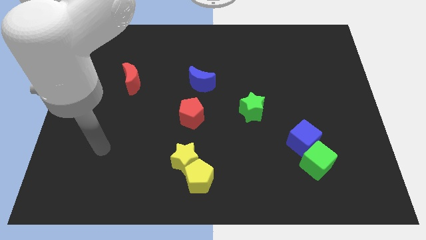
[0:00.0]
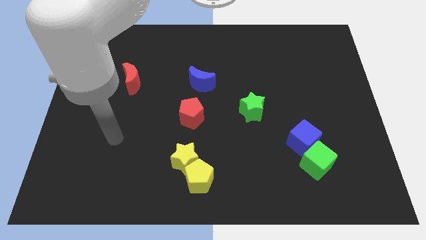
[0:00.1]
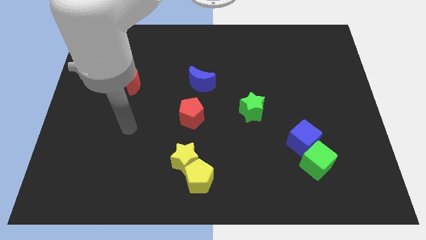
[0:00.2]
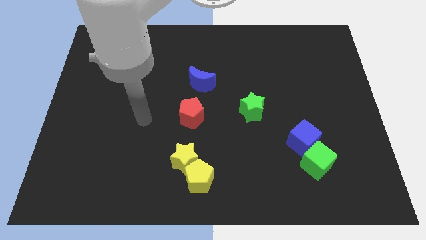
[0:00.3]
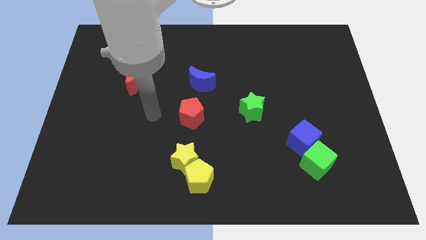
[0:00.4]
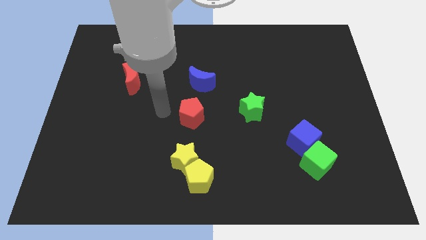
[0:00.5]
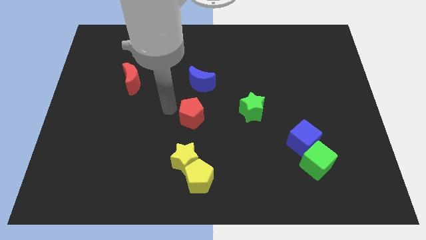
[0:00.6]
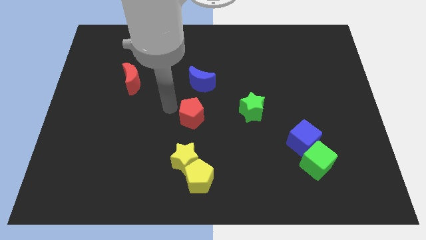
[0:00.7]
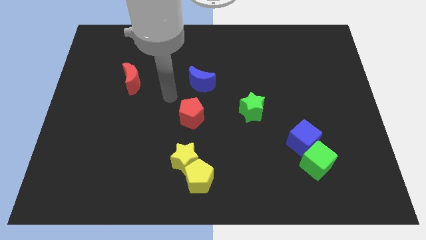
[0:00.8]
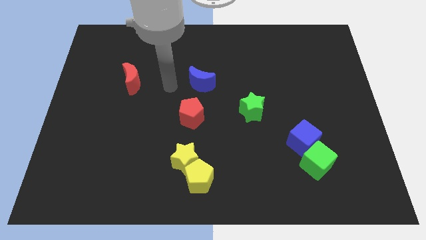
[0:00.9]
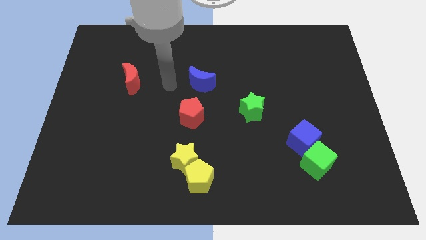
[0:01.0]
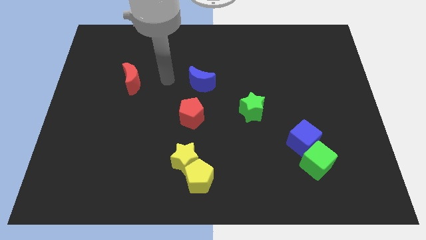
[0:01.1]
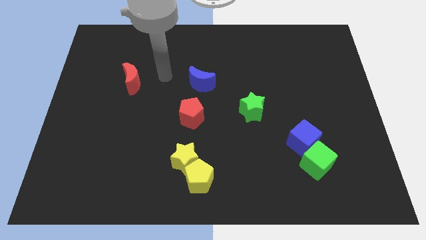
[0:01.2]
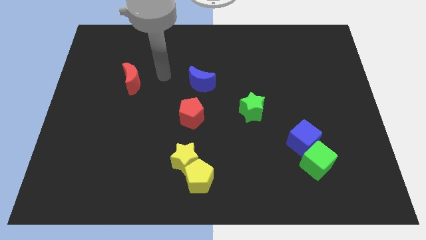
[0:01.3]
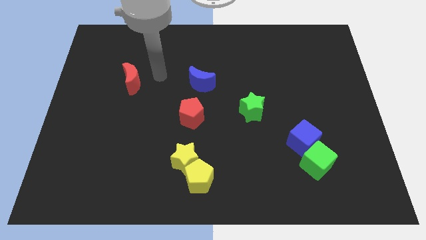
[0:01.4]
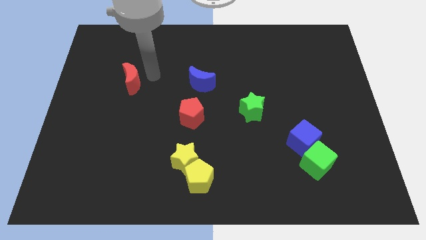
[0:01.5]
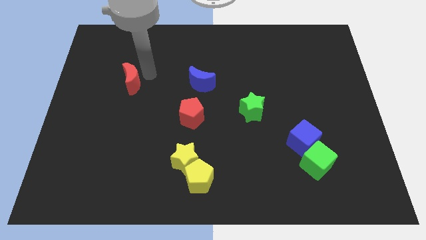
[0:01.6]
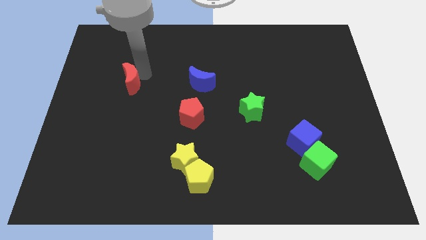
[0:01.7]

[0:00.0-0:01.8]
place your arm right to red moon

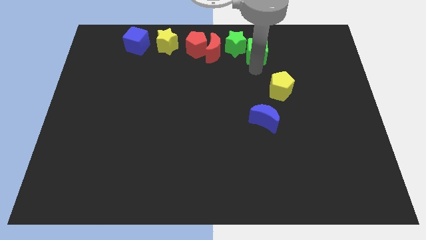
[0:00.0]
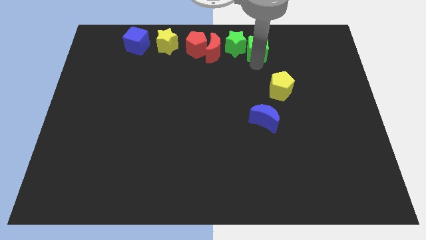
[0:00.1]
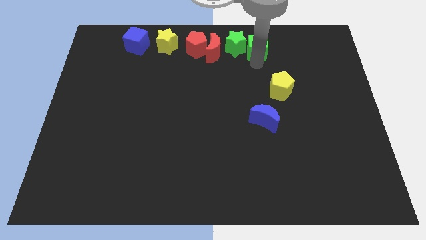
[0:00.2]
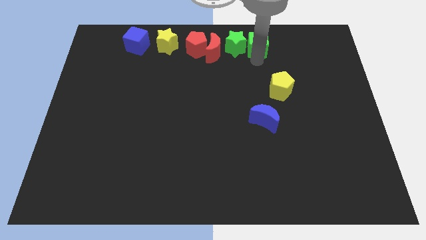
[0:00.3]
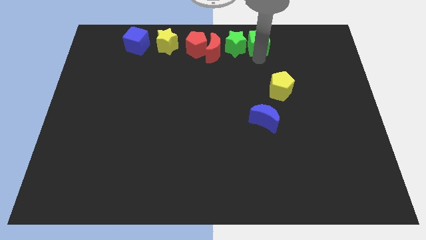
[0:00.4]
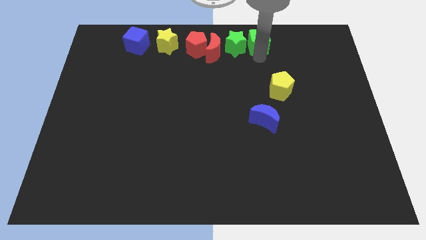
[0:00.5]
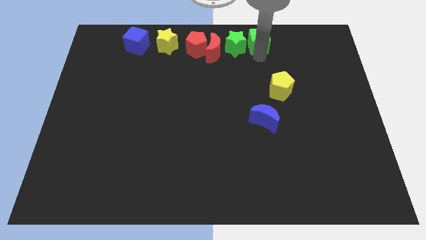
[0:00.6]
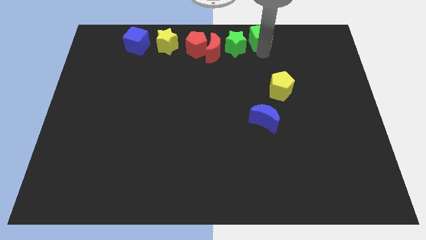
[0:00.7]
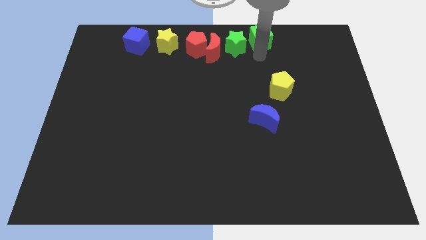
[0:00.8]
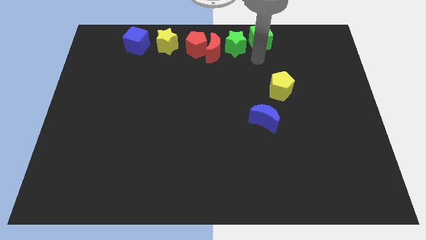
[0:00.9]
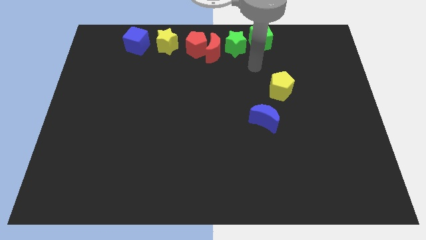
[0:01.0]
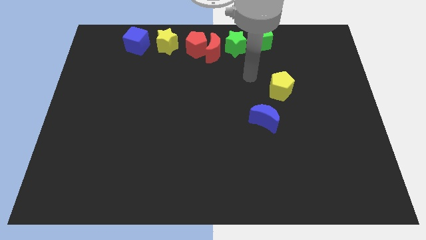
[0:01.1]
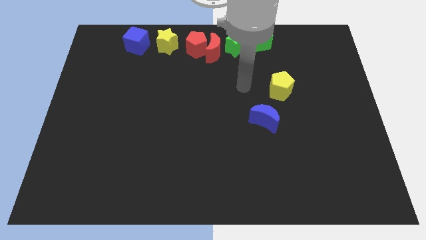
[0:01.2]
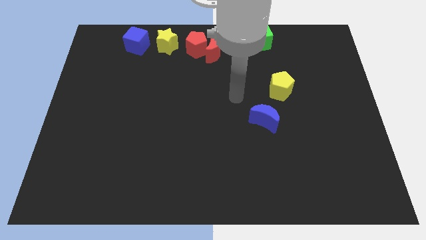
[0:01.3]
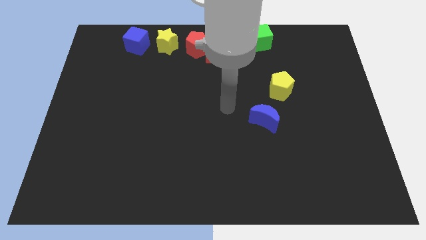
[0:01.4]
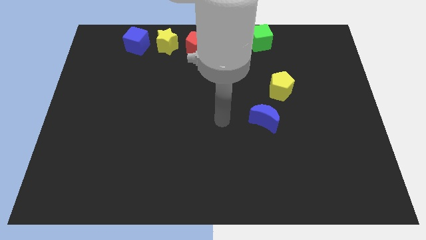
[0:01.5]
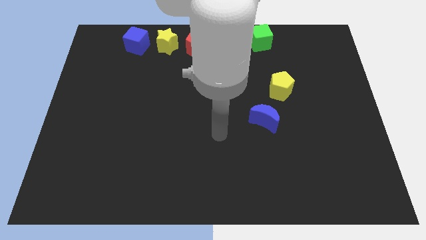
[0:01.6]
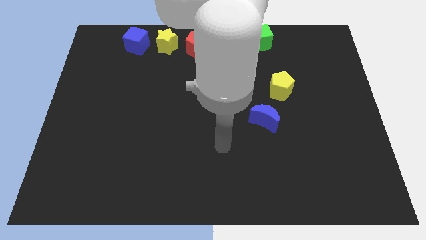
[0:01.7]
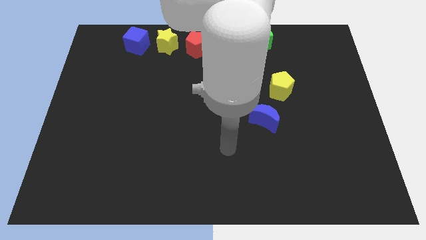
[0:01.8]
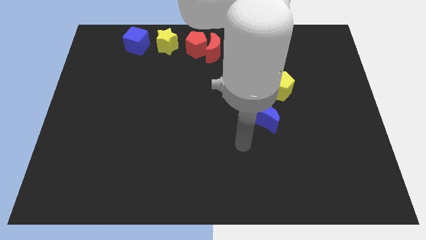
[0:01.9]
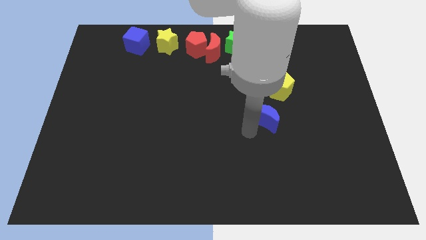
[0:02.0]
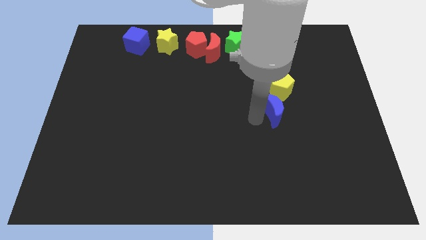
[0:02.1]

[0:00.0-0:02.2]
move your arm to the bottom of the blue crescent

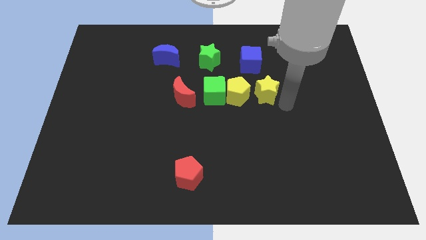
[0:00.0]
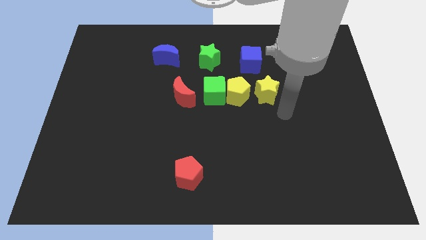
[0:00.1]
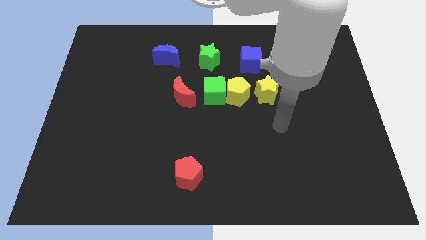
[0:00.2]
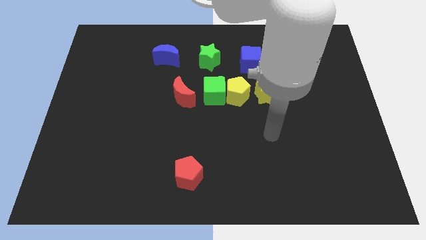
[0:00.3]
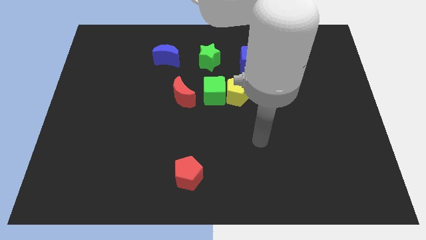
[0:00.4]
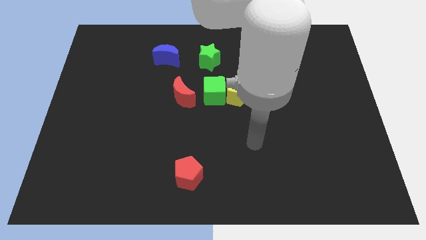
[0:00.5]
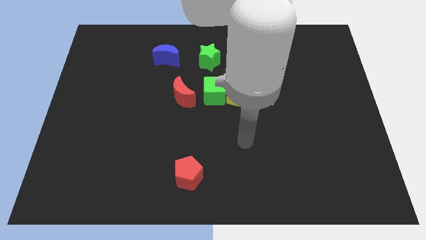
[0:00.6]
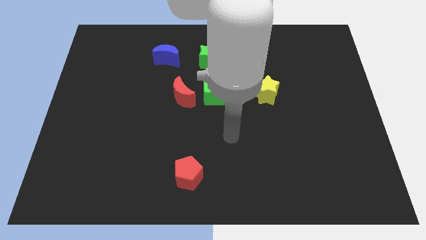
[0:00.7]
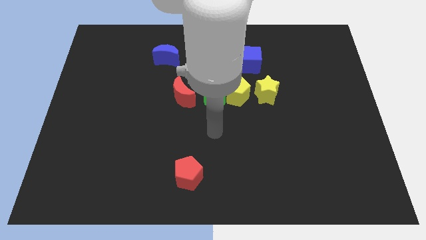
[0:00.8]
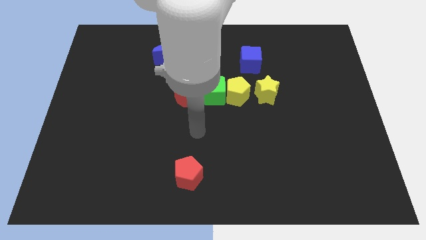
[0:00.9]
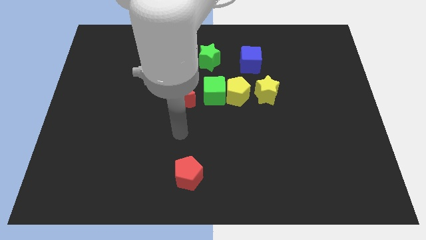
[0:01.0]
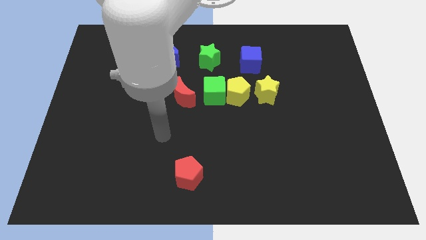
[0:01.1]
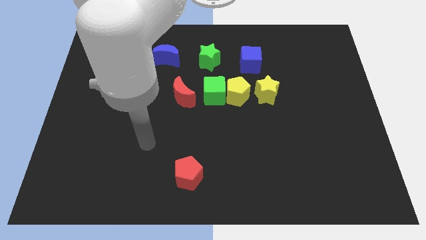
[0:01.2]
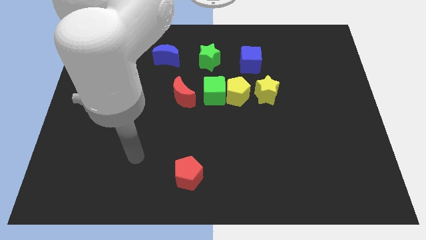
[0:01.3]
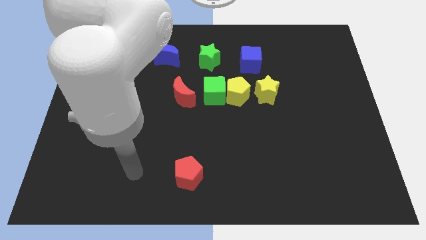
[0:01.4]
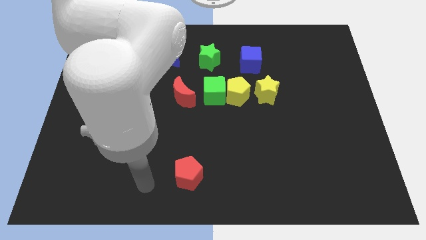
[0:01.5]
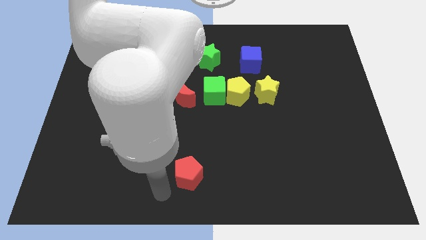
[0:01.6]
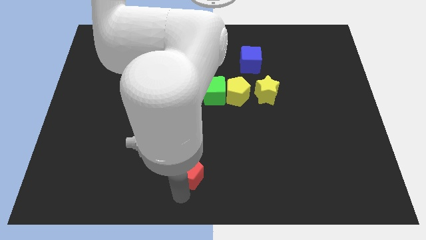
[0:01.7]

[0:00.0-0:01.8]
point the below the red pentagon

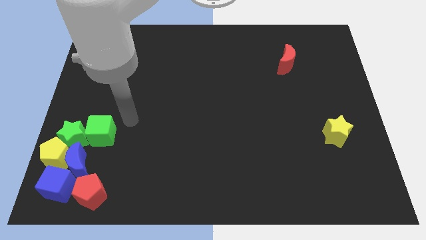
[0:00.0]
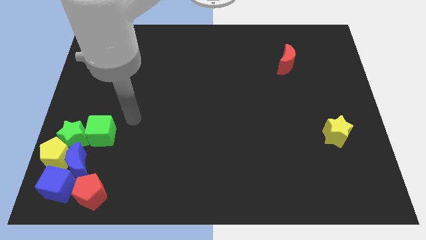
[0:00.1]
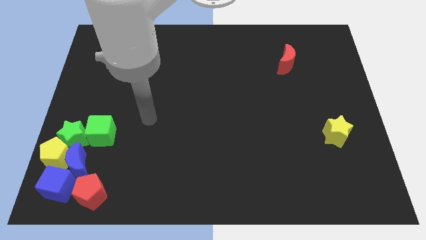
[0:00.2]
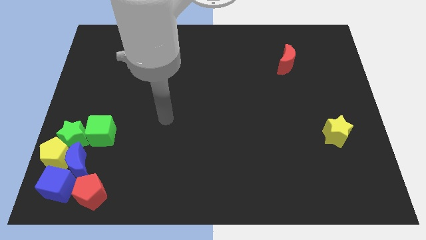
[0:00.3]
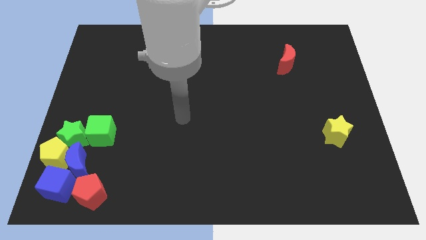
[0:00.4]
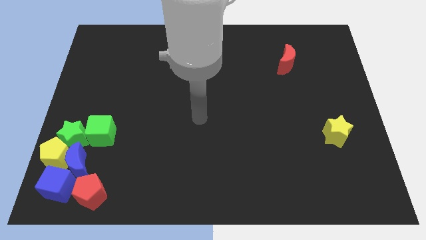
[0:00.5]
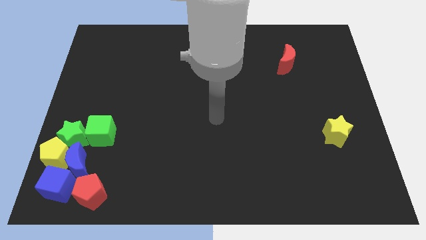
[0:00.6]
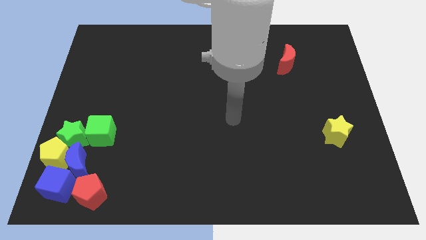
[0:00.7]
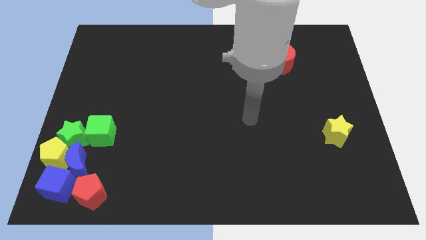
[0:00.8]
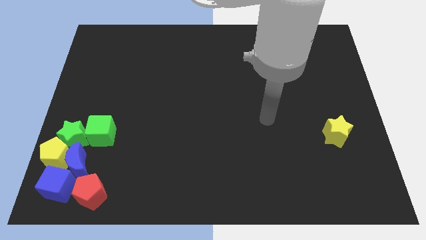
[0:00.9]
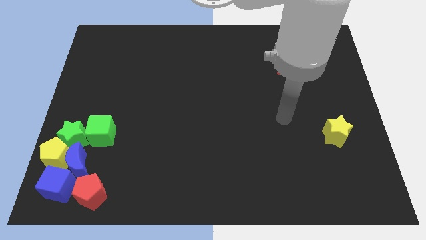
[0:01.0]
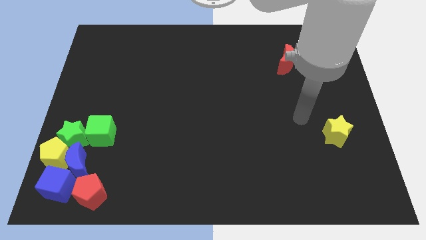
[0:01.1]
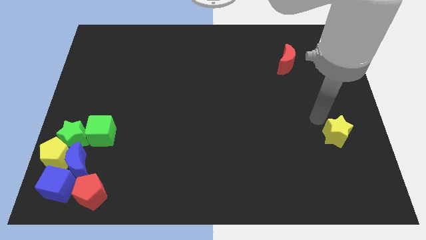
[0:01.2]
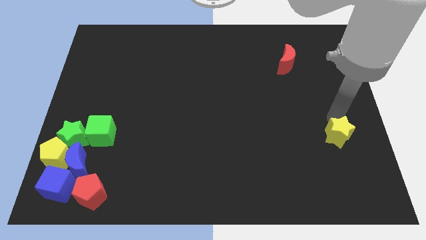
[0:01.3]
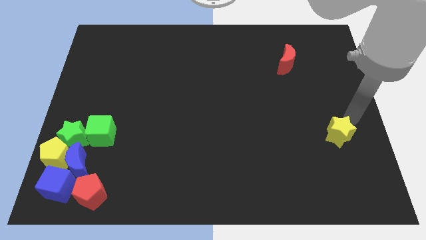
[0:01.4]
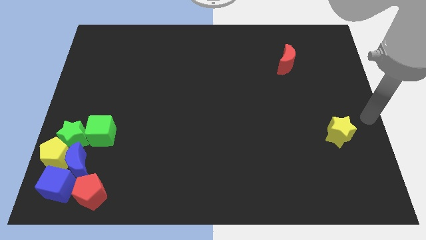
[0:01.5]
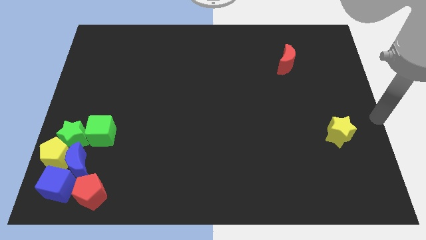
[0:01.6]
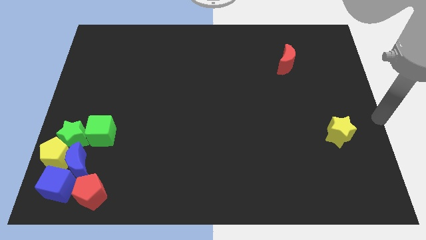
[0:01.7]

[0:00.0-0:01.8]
move the arm from left center to the right center

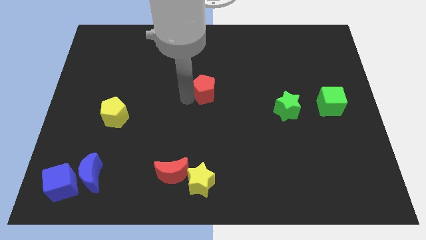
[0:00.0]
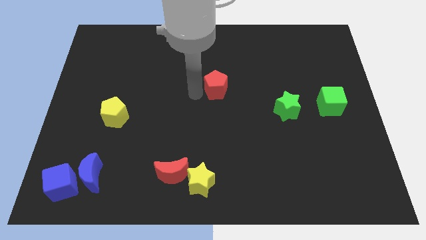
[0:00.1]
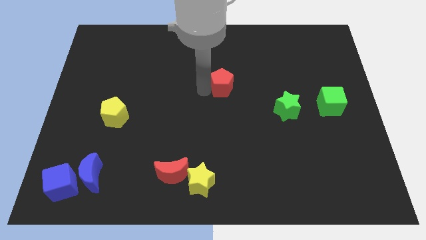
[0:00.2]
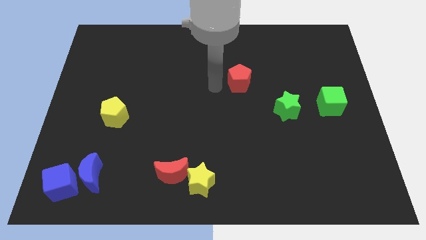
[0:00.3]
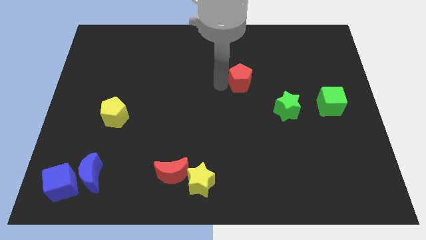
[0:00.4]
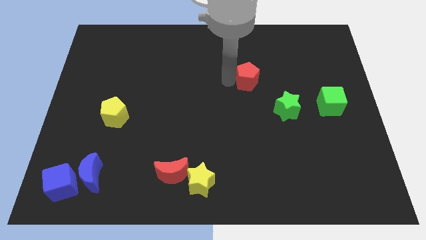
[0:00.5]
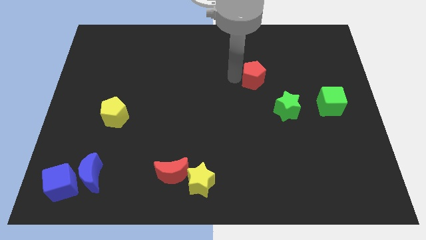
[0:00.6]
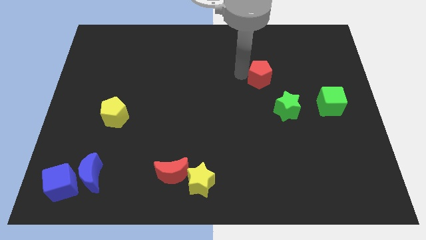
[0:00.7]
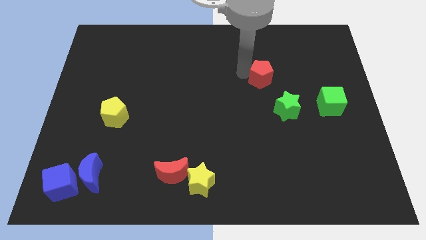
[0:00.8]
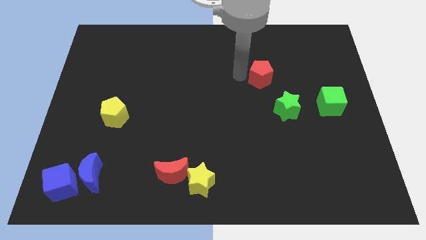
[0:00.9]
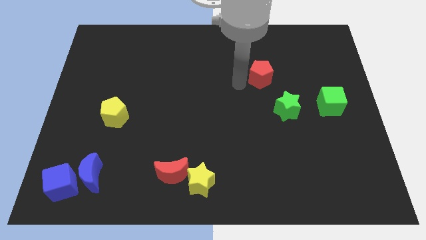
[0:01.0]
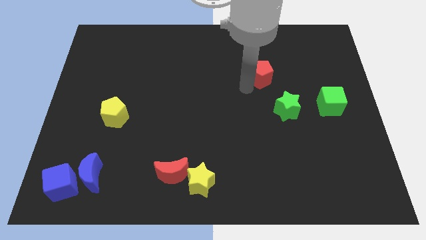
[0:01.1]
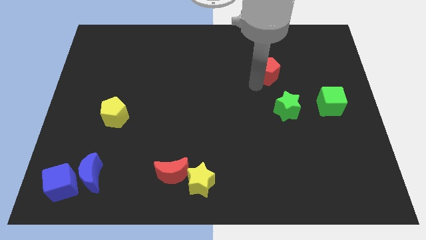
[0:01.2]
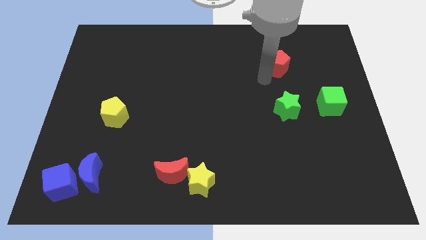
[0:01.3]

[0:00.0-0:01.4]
place the red pentagon above the green star
